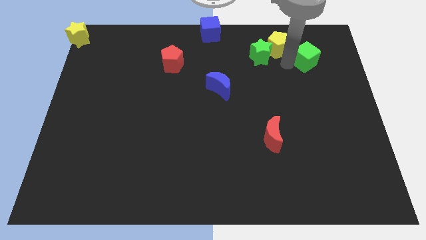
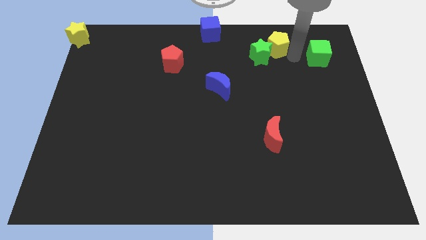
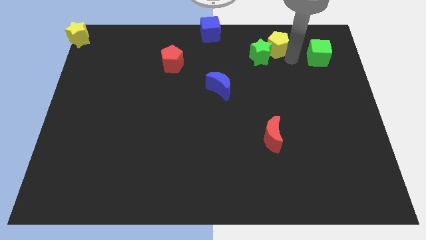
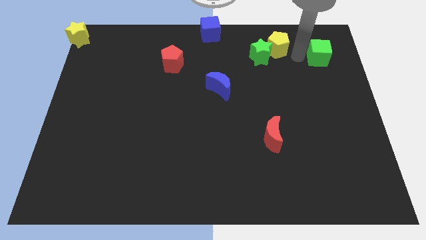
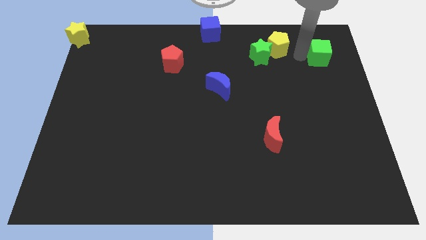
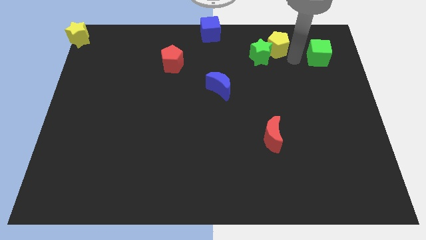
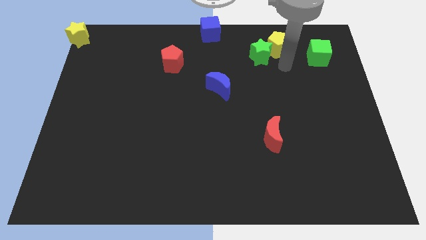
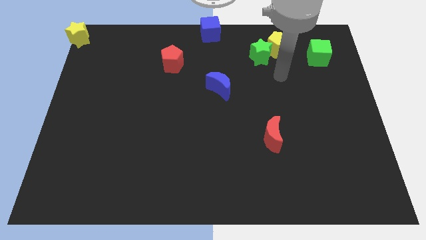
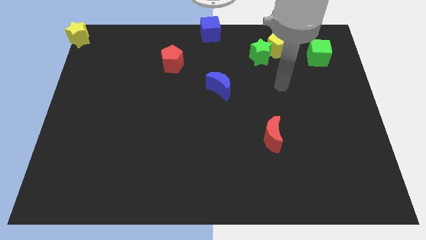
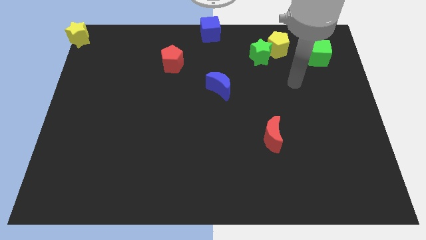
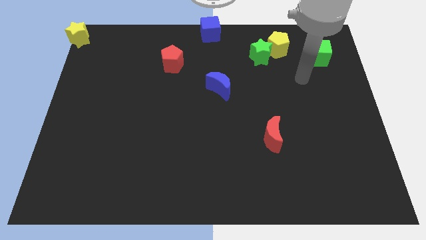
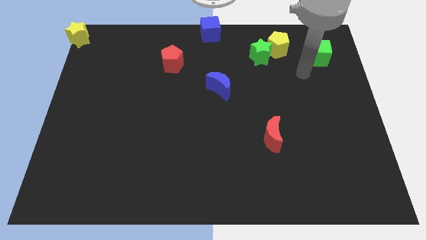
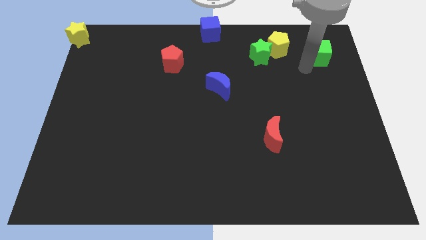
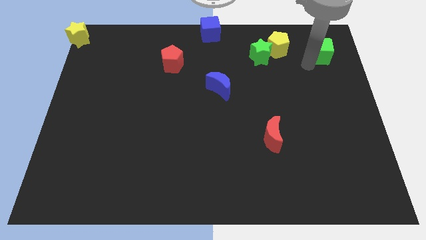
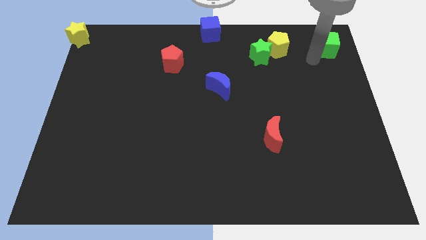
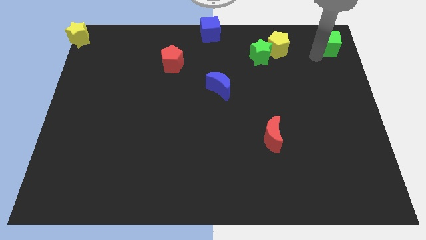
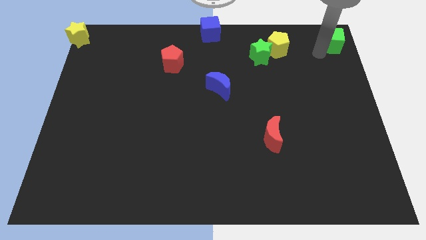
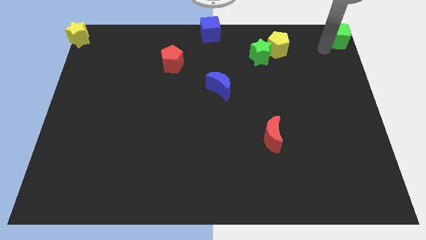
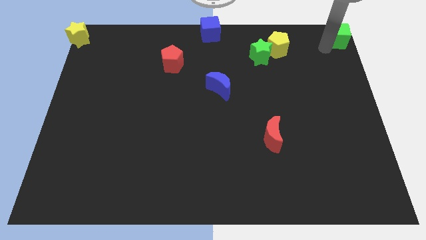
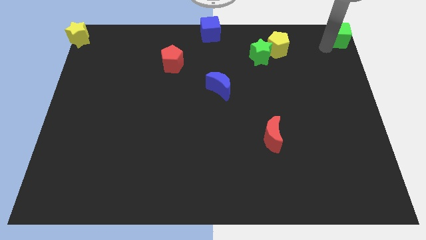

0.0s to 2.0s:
put the green cube at the top right corner

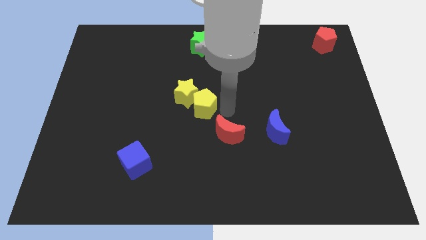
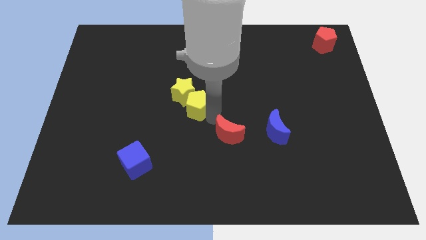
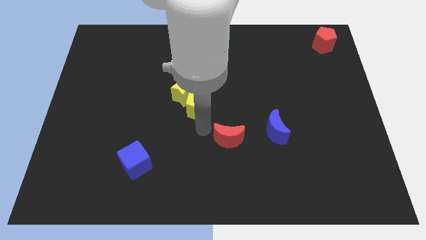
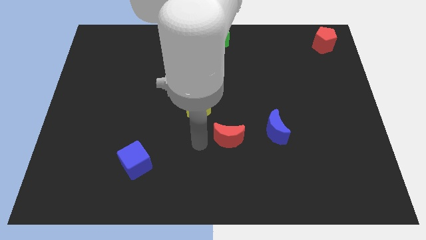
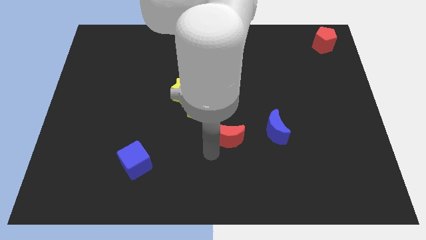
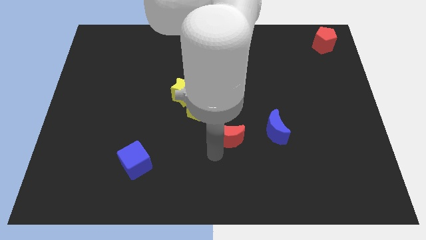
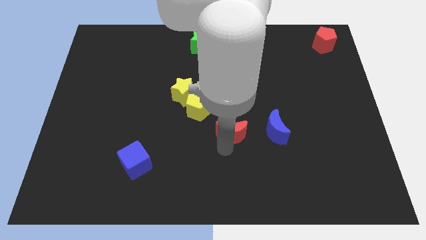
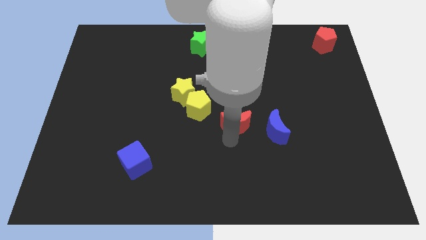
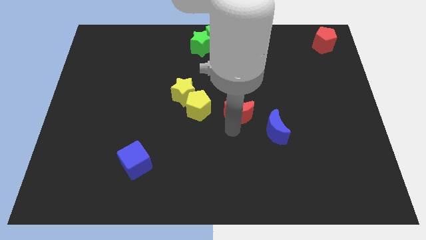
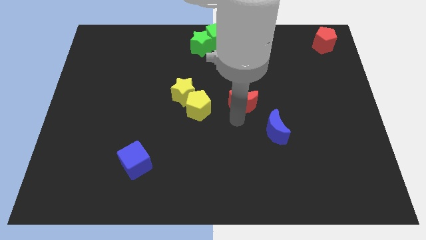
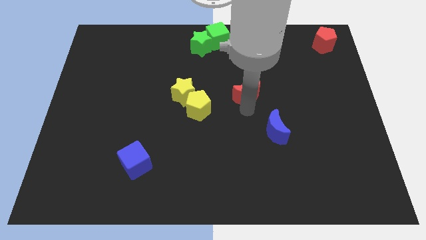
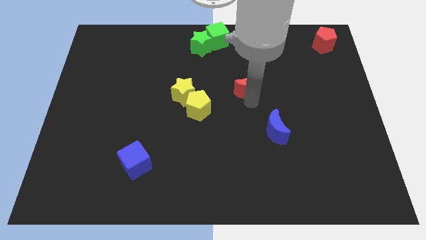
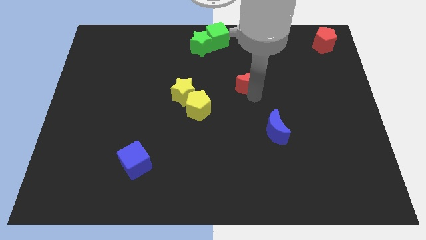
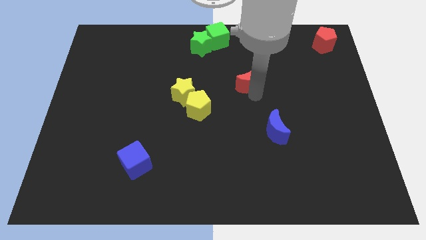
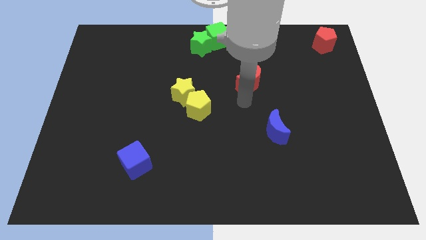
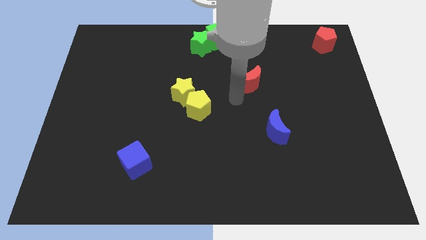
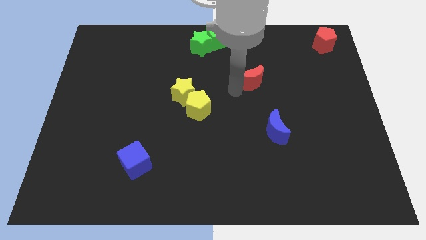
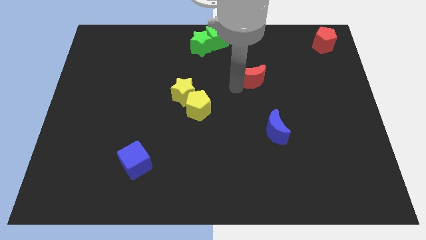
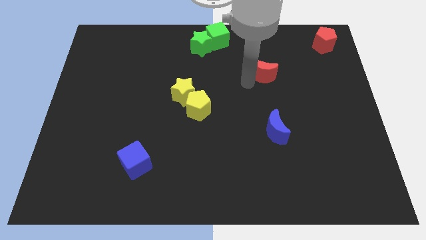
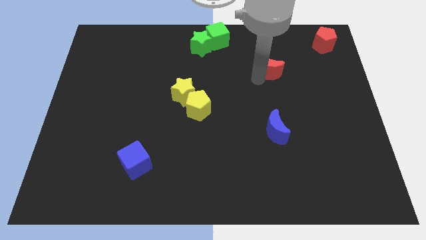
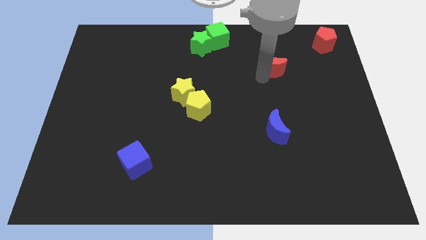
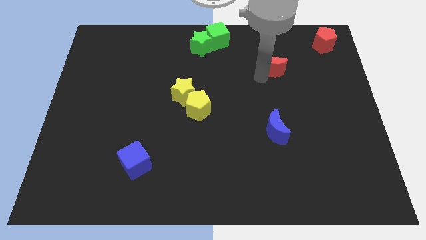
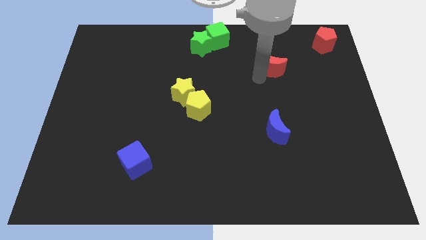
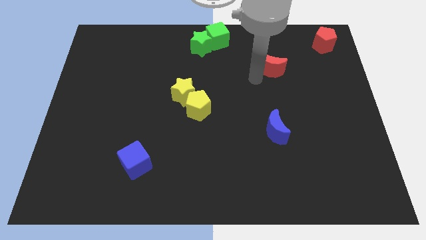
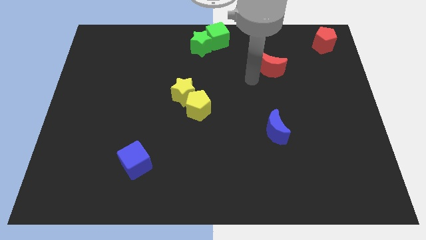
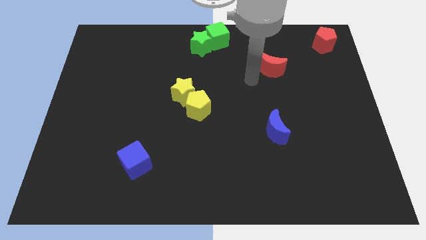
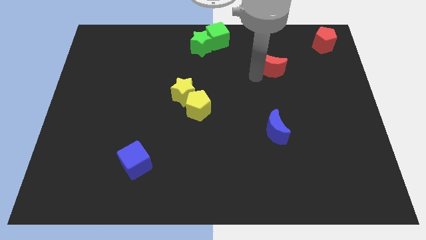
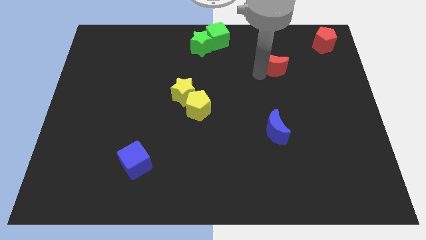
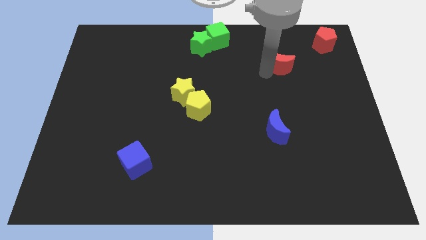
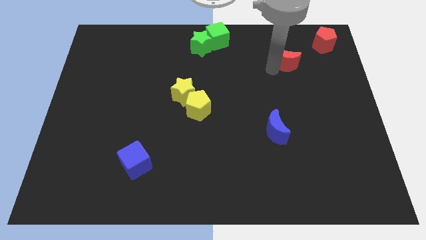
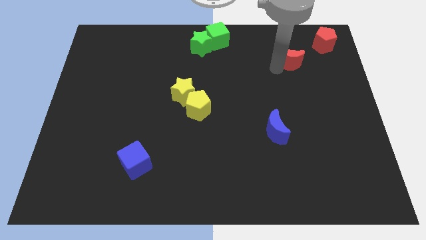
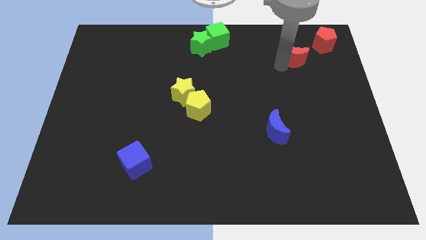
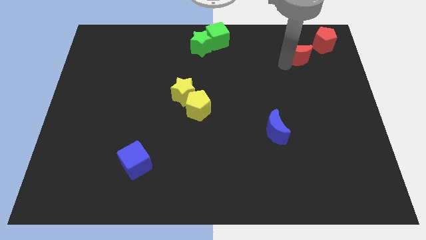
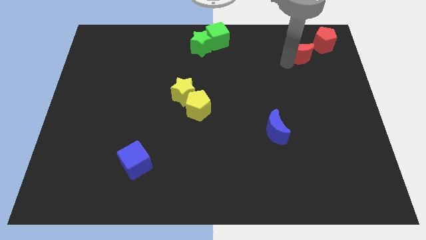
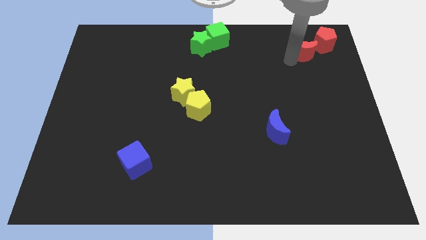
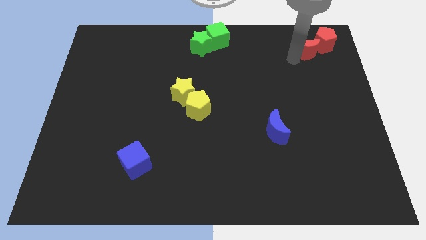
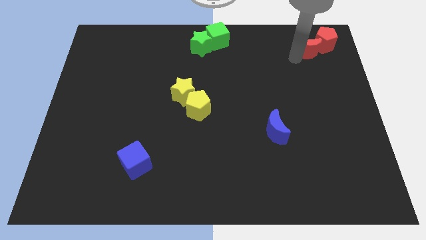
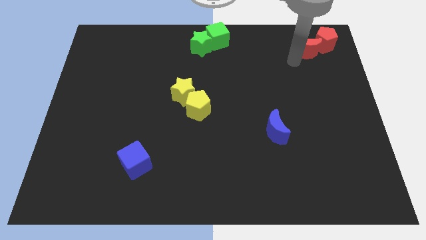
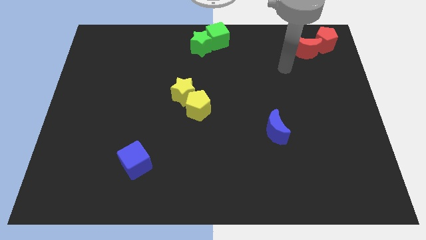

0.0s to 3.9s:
move the red crescent into the red pentagon

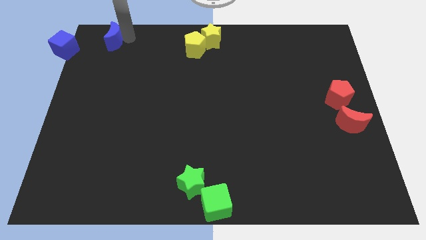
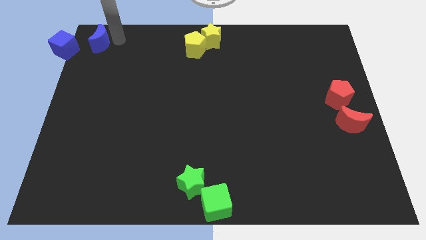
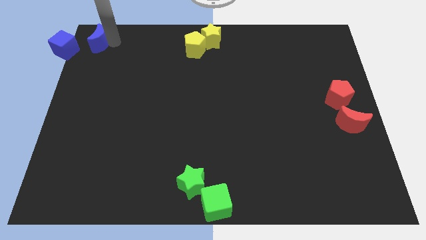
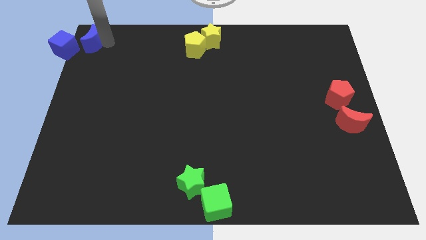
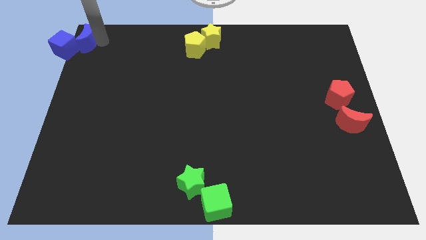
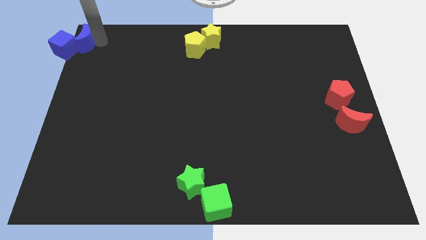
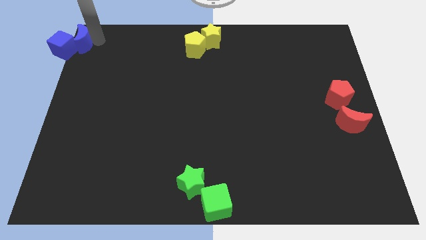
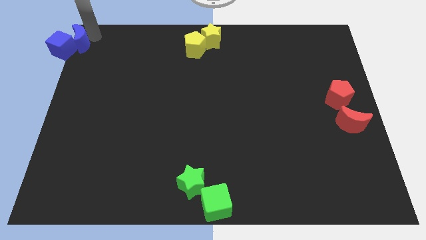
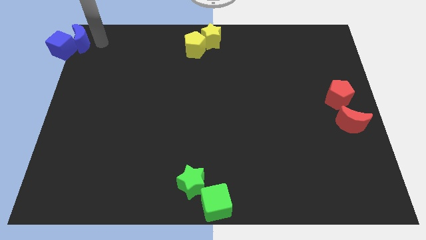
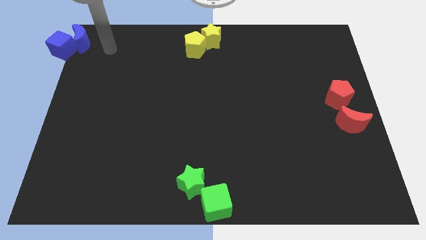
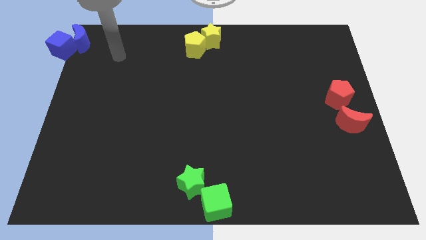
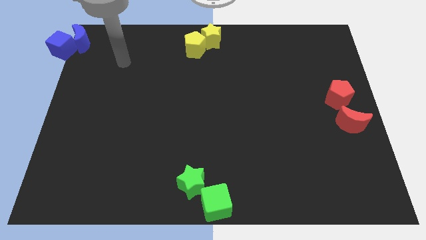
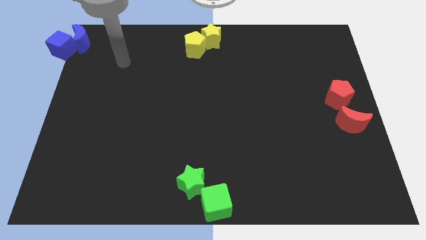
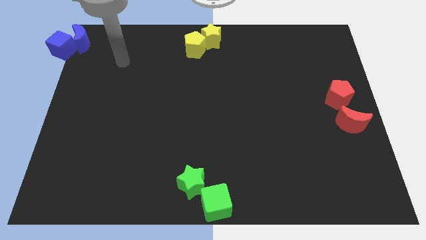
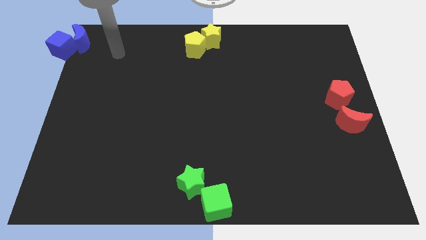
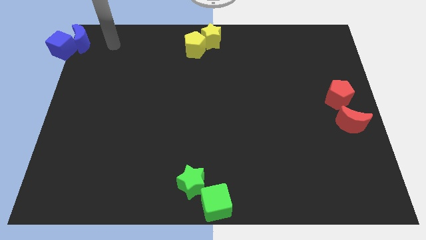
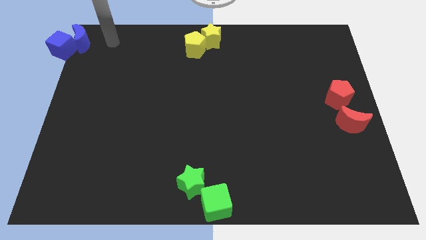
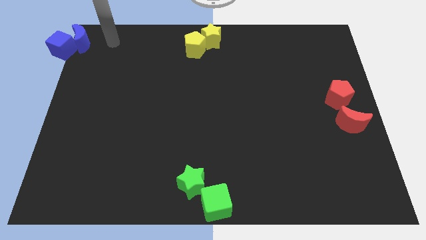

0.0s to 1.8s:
put the blue semi circle into the blue cube

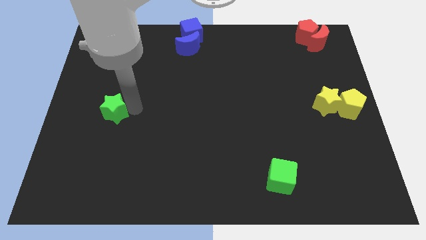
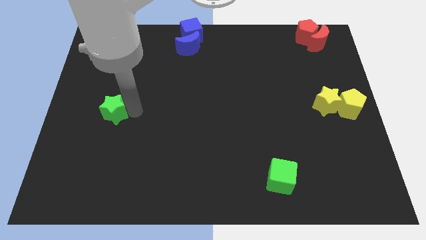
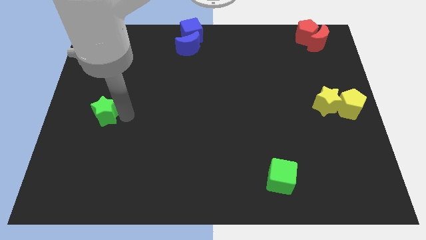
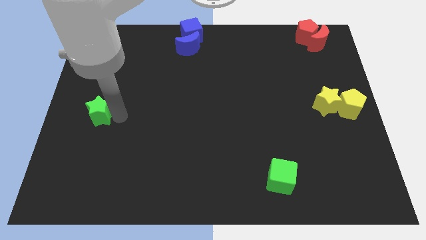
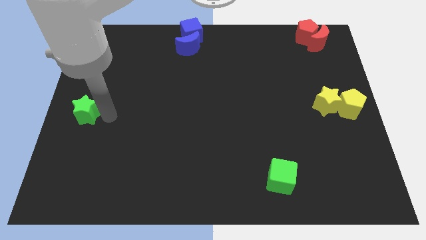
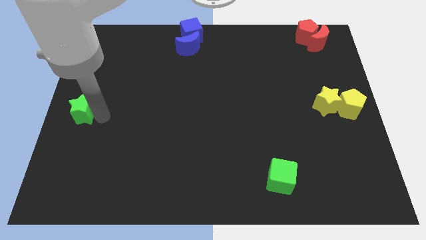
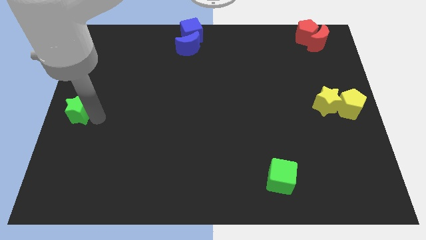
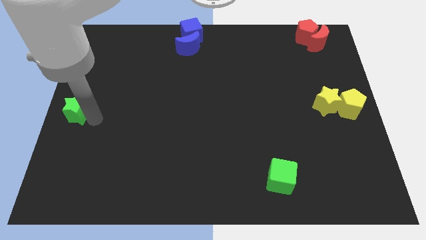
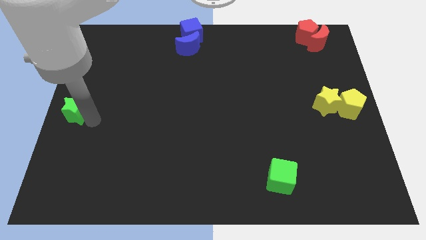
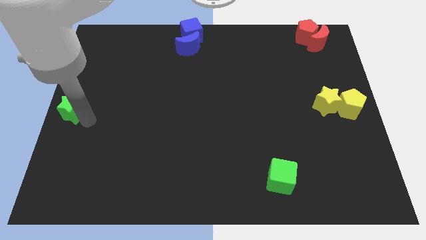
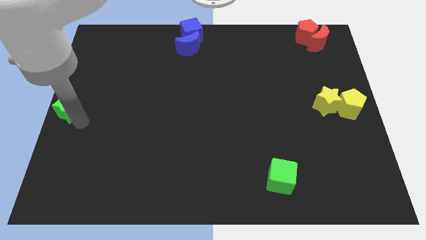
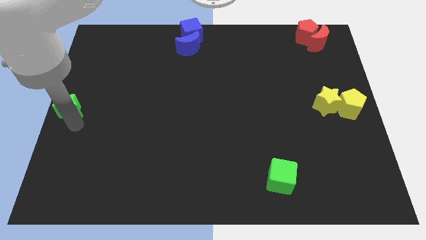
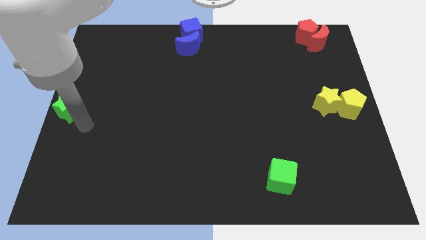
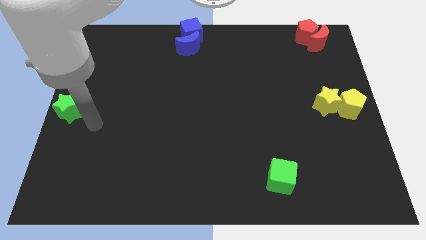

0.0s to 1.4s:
place the green star to the left center of the board
